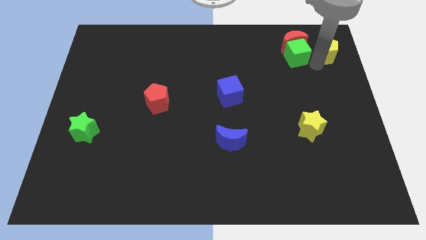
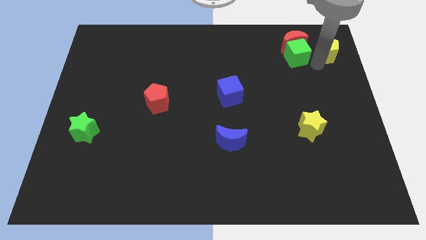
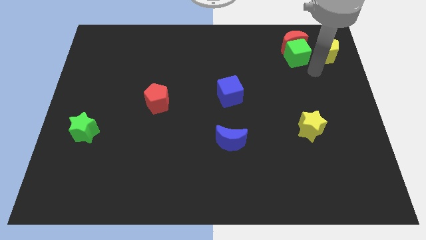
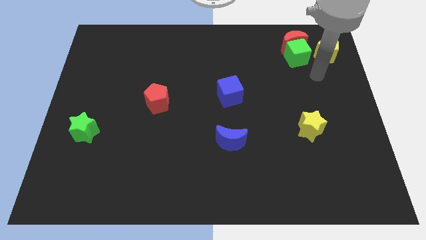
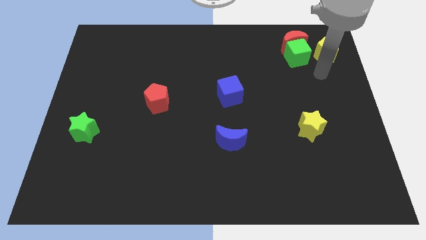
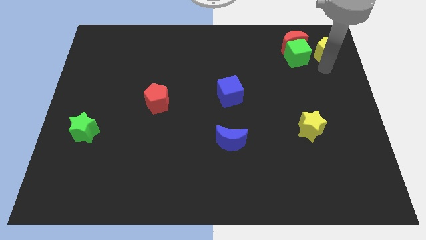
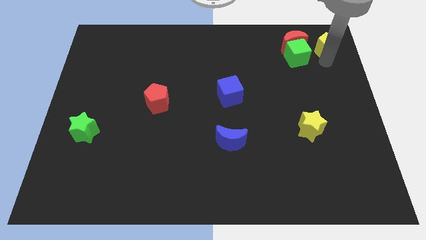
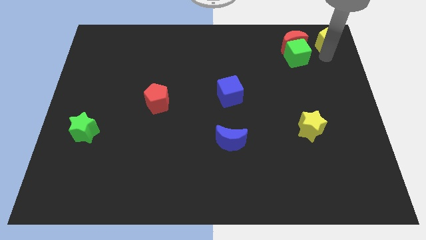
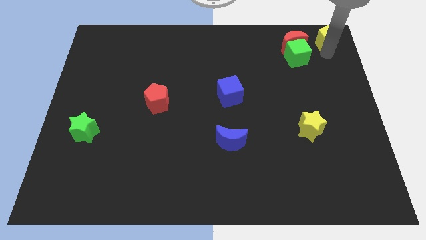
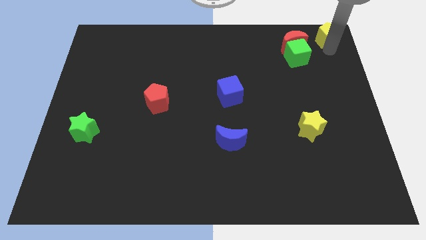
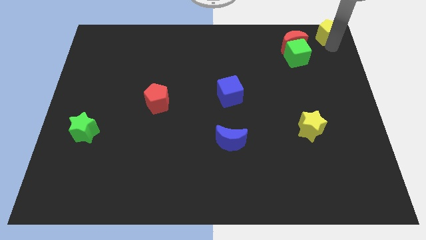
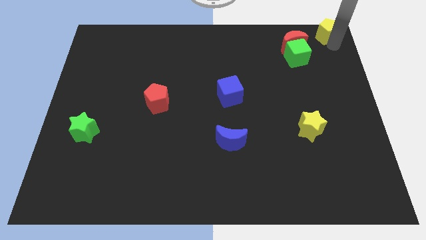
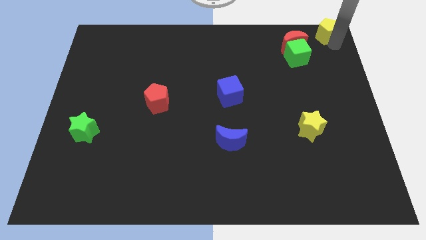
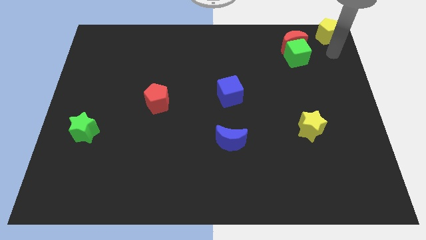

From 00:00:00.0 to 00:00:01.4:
push the yellow pentagon to the top right of the board

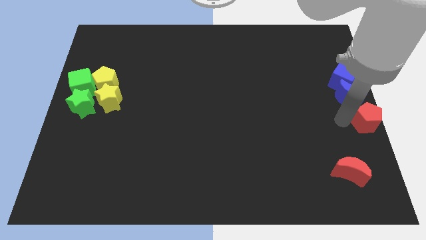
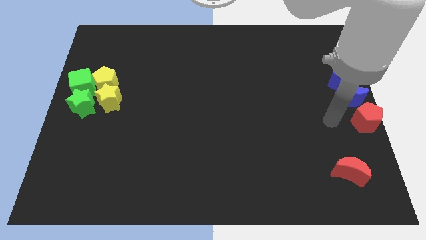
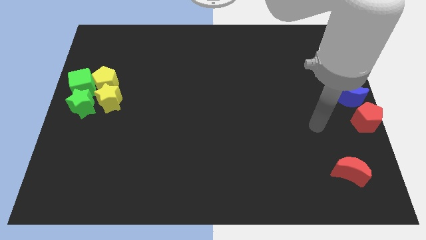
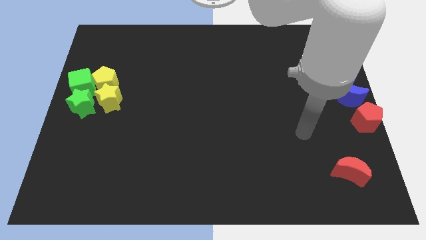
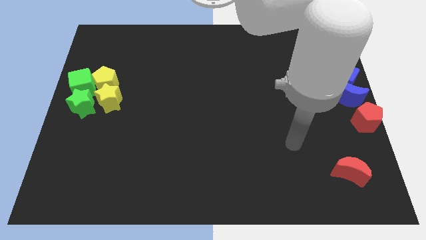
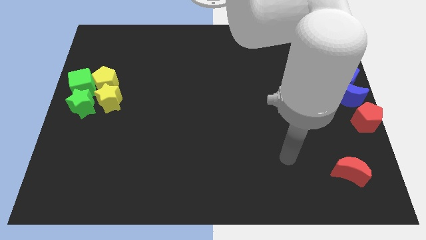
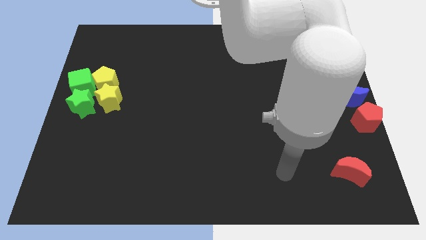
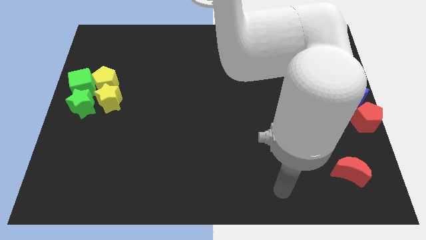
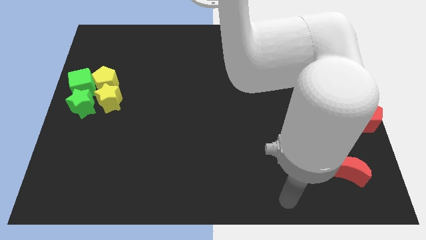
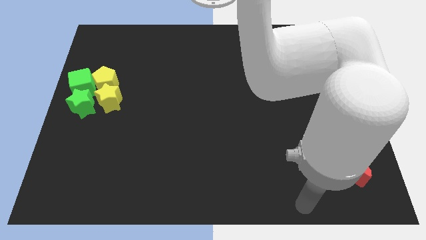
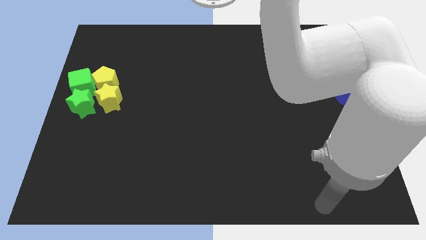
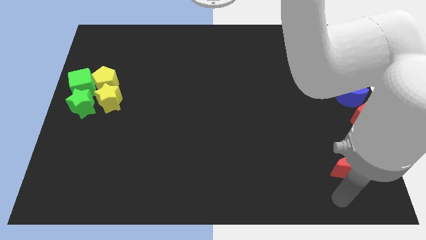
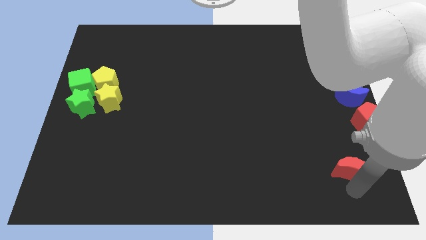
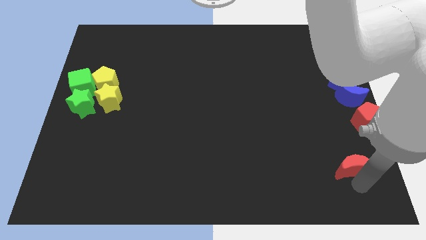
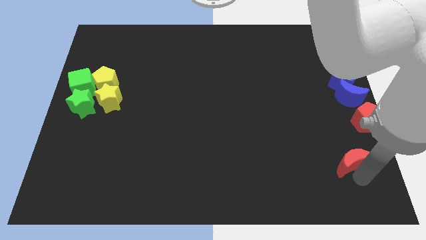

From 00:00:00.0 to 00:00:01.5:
place the arm under the red crescent

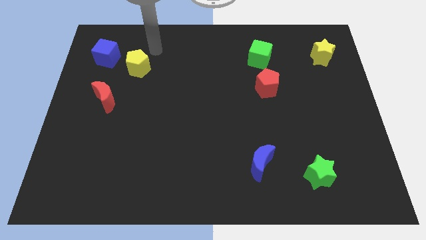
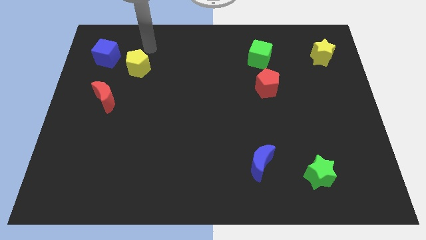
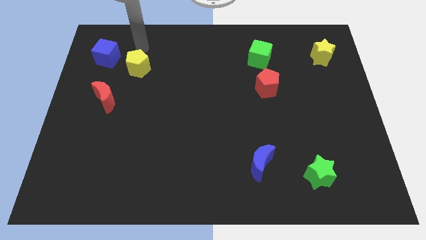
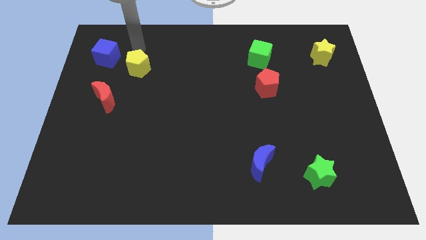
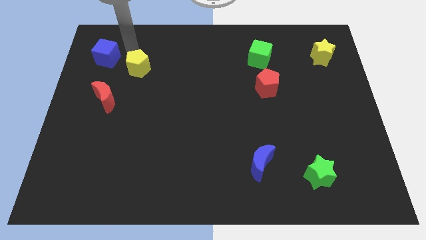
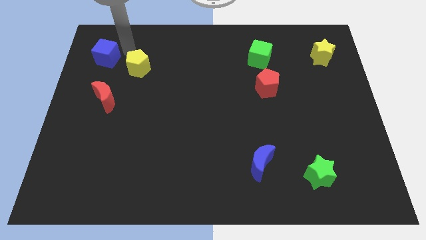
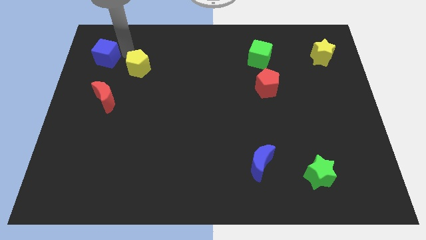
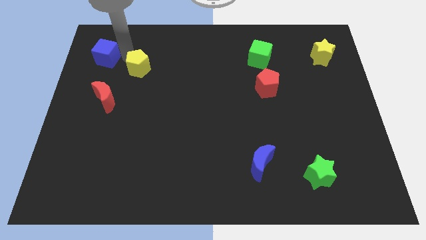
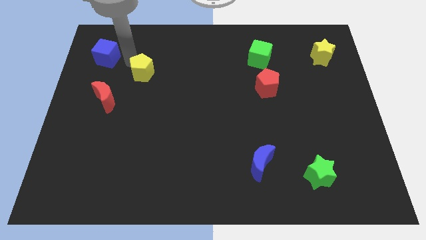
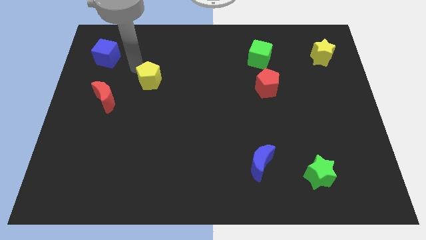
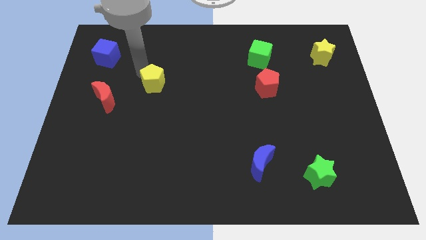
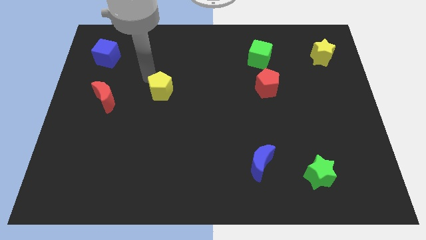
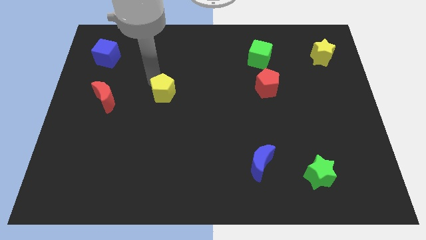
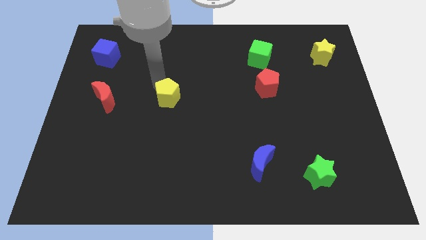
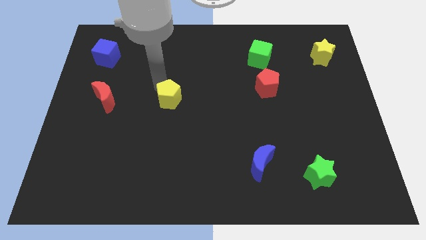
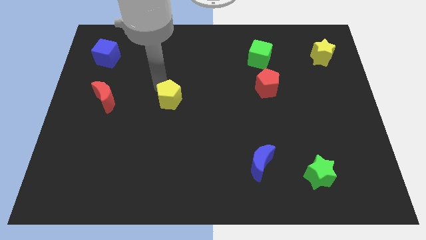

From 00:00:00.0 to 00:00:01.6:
push the yellow pentagon parallel to the red crescent

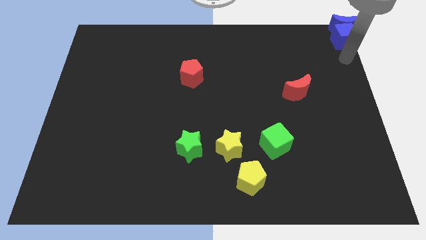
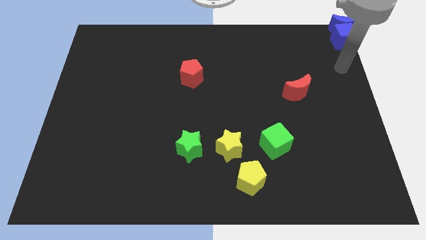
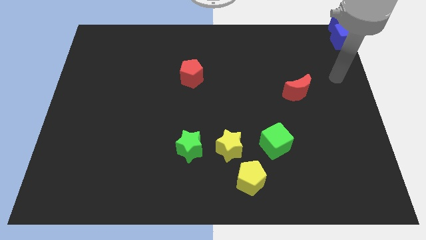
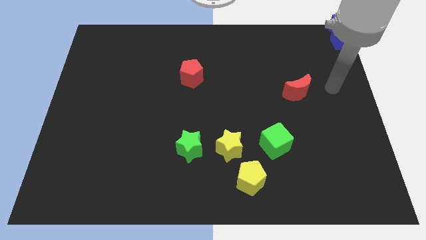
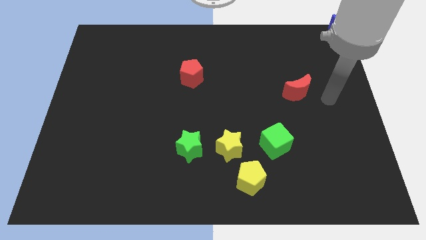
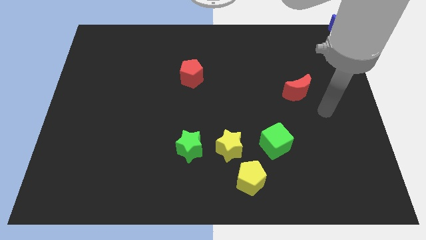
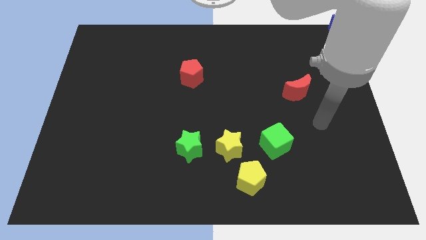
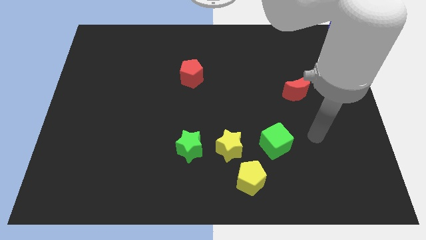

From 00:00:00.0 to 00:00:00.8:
move arm away from blue blocks

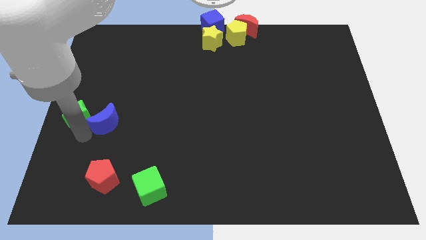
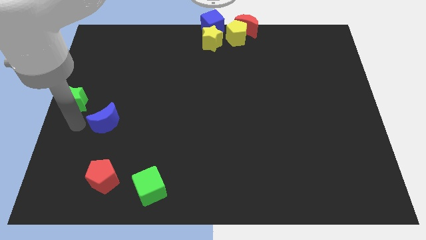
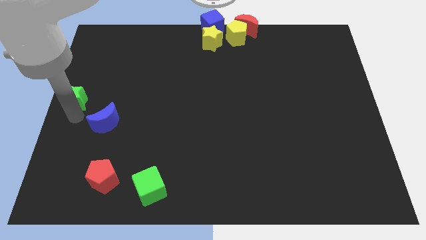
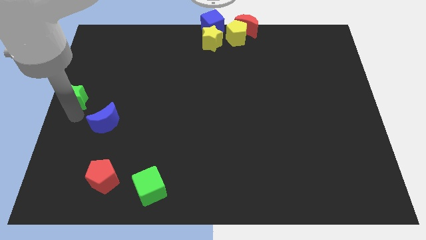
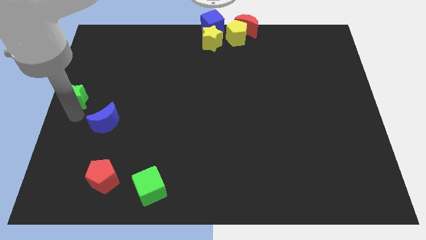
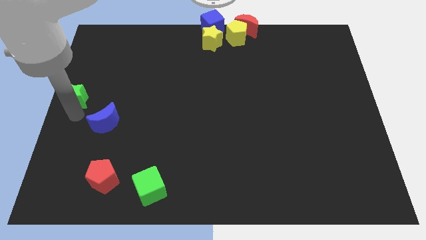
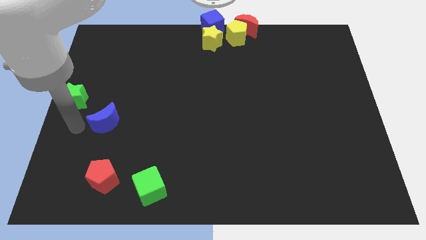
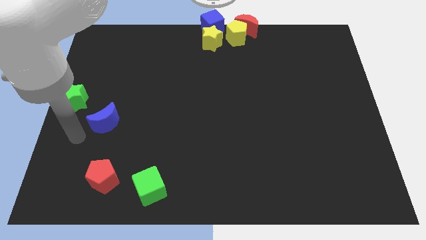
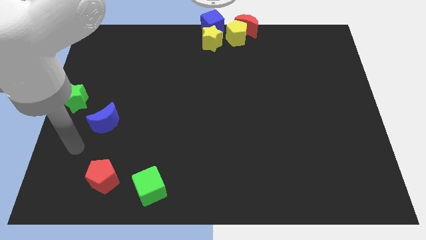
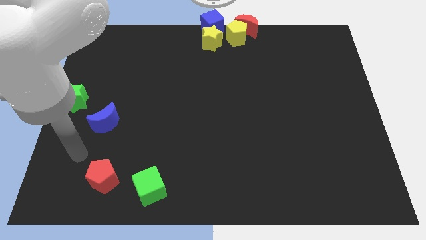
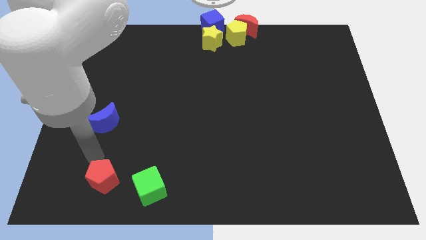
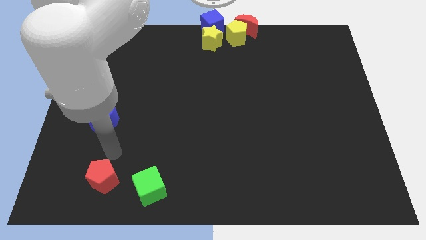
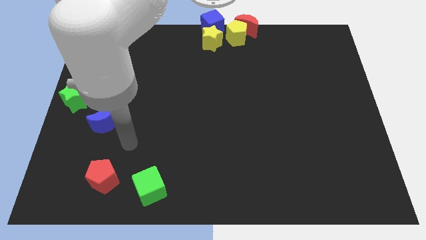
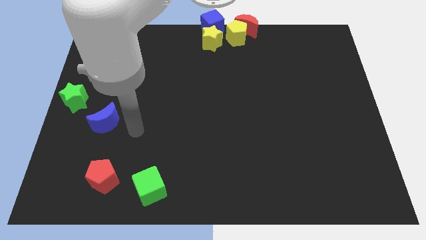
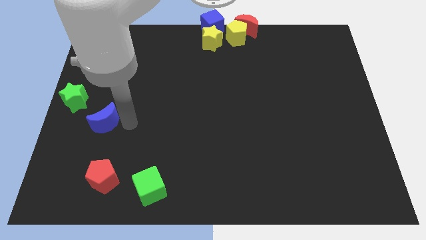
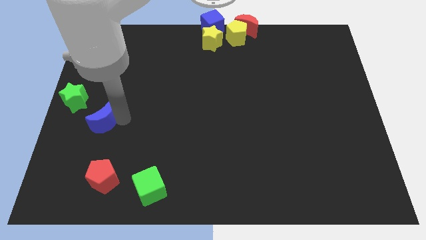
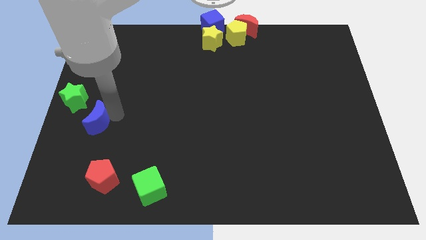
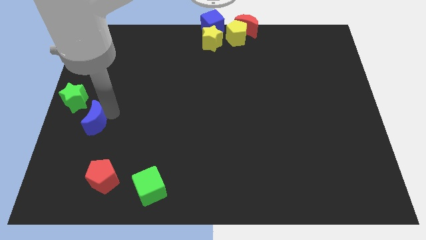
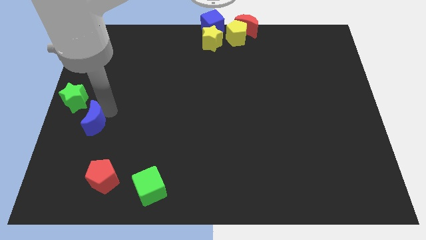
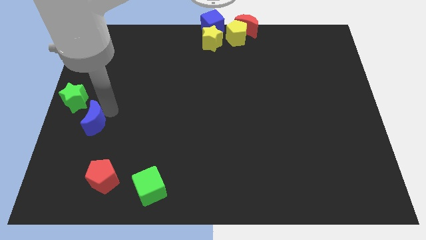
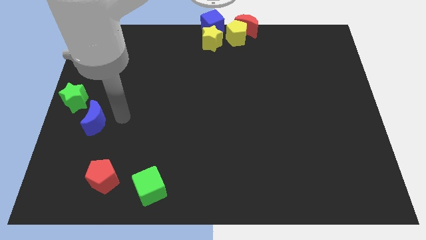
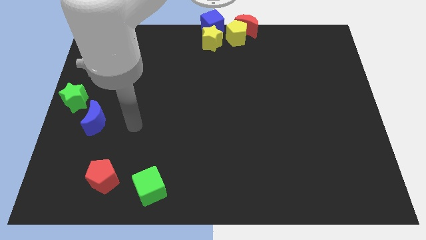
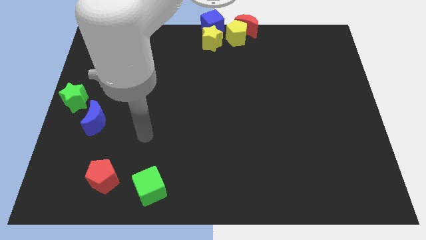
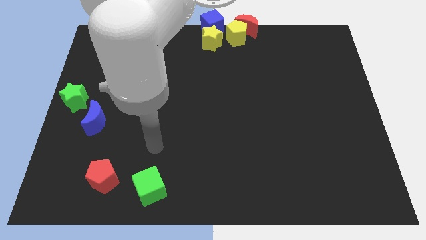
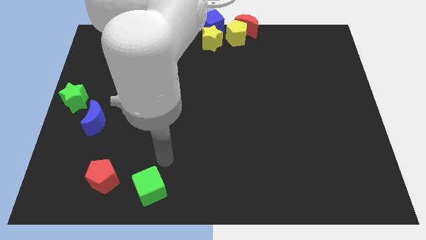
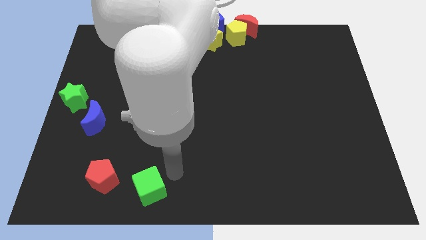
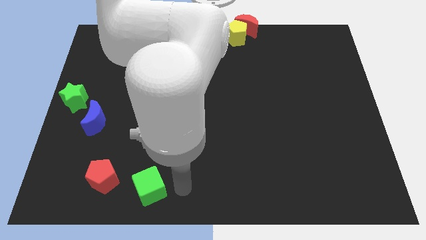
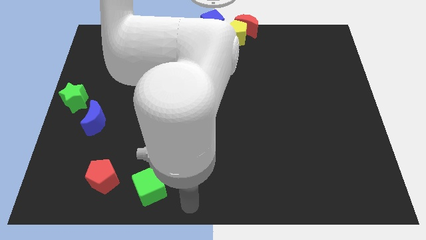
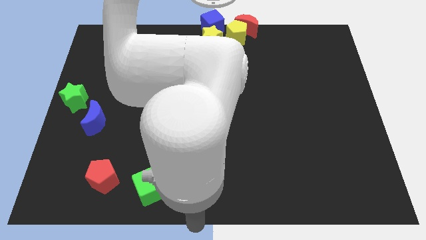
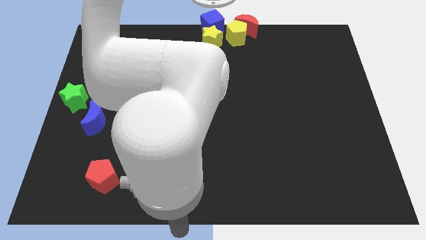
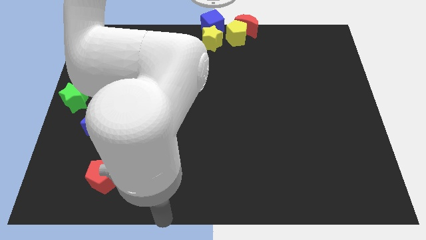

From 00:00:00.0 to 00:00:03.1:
place the arm down to the green cube

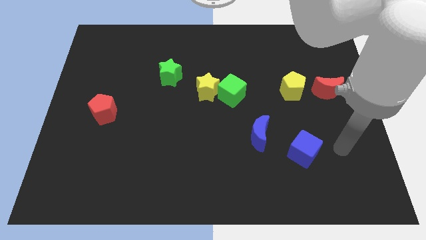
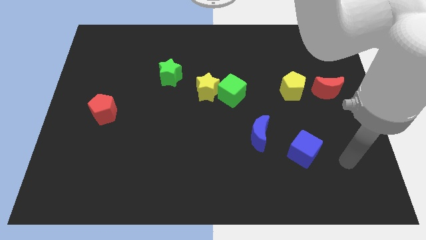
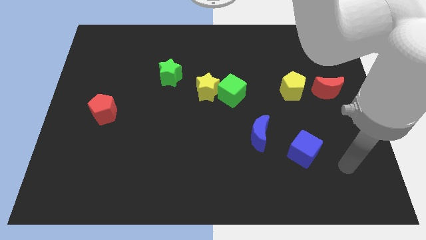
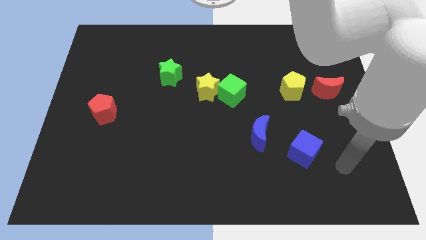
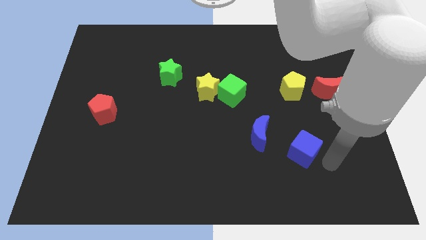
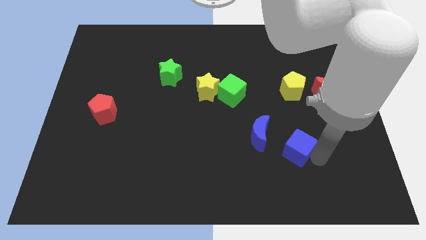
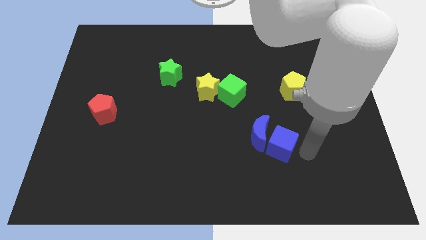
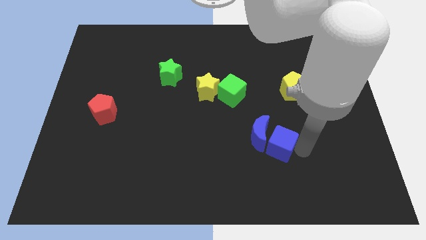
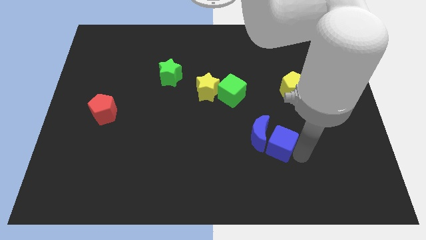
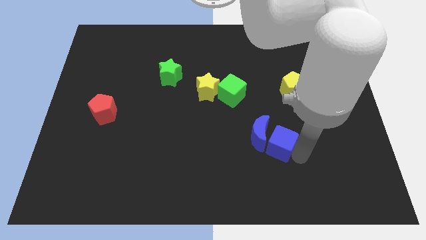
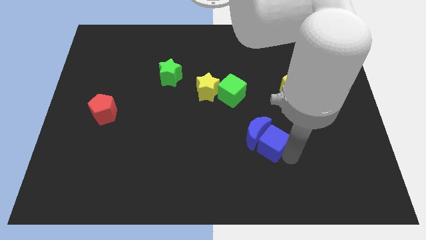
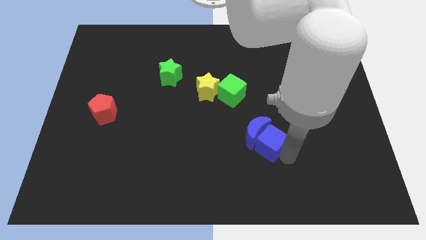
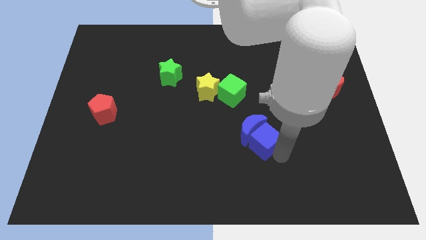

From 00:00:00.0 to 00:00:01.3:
push the blue cube into the blue crescent
